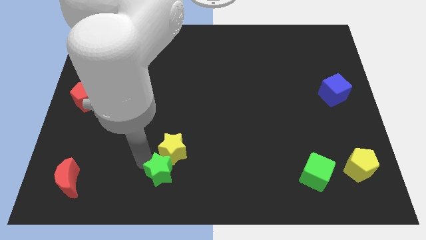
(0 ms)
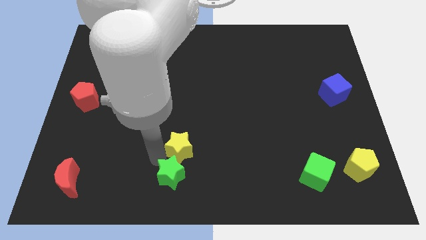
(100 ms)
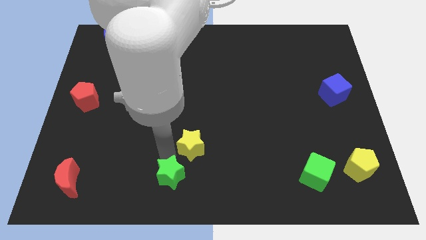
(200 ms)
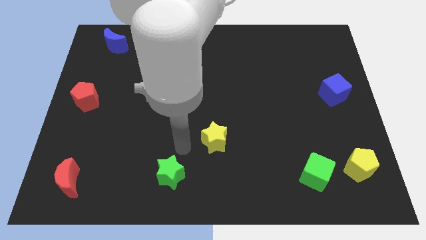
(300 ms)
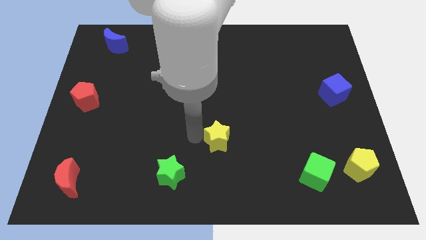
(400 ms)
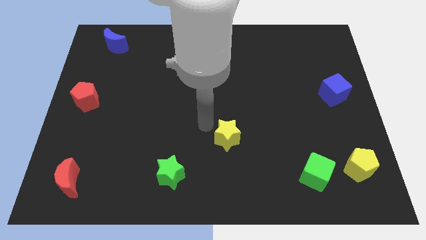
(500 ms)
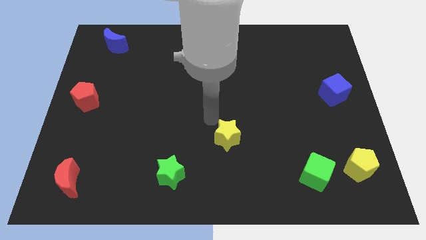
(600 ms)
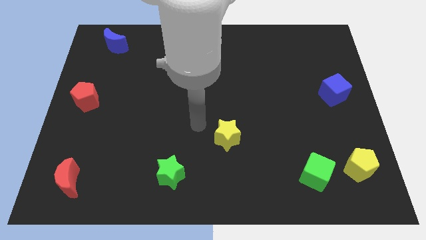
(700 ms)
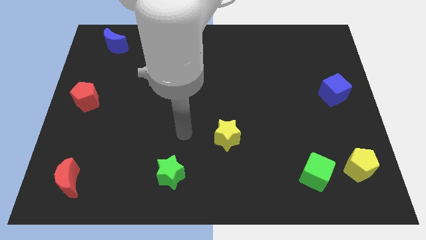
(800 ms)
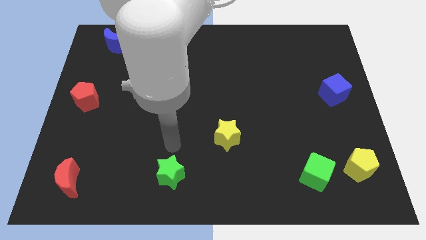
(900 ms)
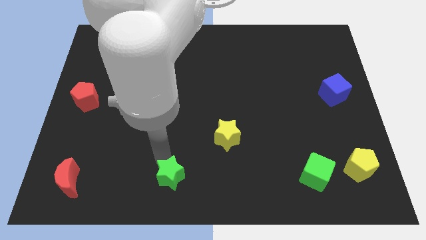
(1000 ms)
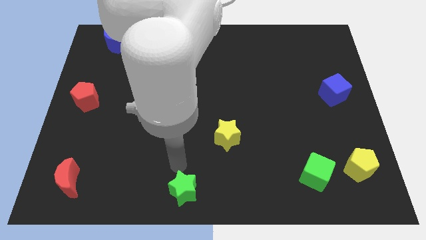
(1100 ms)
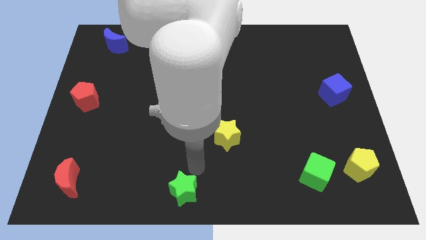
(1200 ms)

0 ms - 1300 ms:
place the green star to the bottom middle of the board

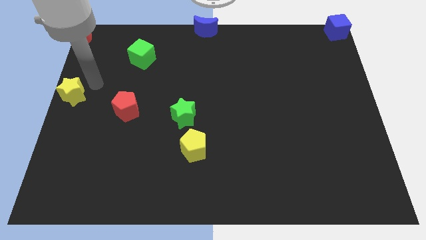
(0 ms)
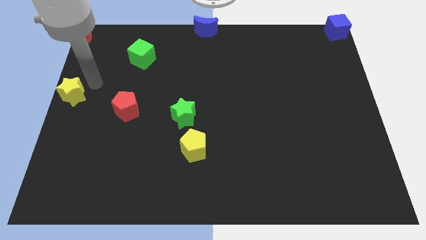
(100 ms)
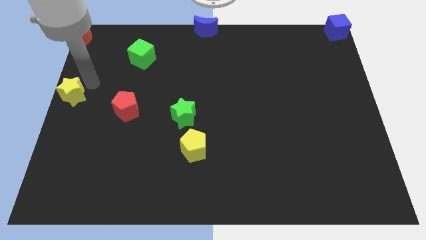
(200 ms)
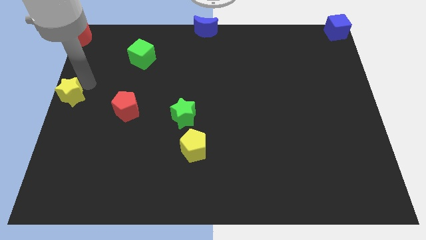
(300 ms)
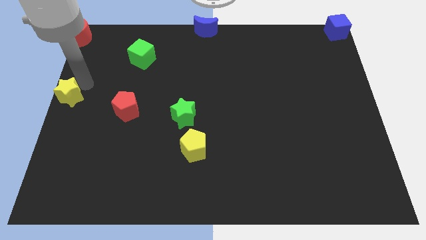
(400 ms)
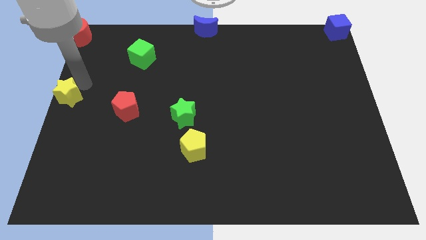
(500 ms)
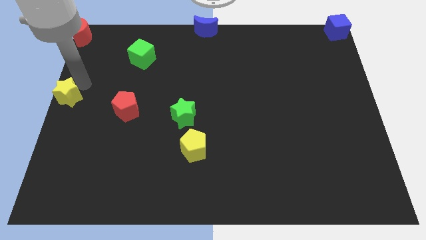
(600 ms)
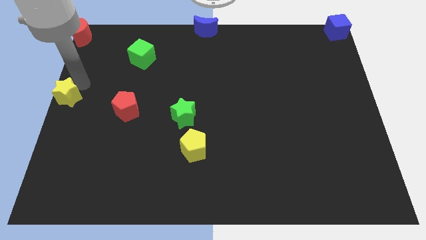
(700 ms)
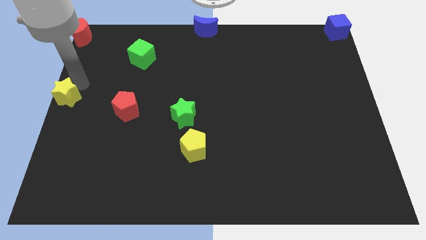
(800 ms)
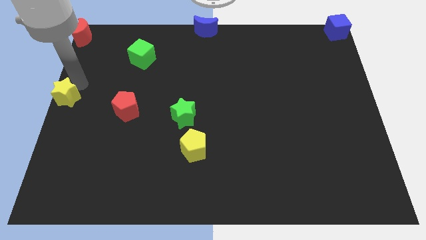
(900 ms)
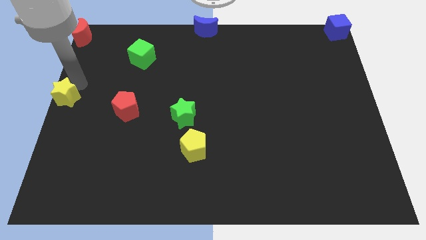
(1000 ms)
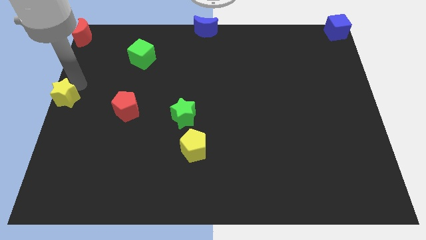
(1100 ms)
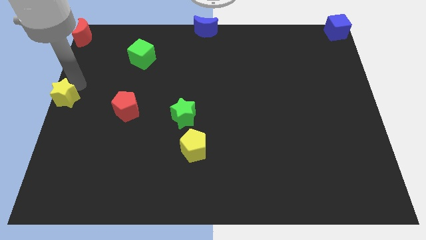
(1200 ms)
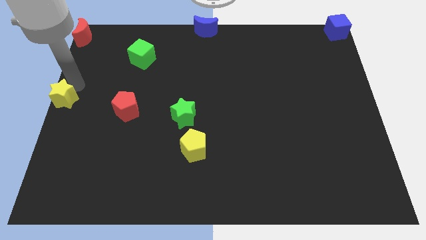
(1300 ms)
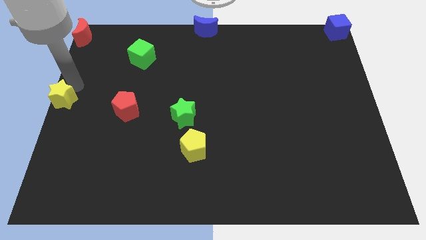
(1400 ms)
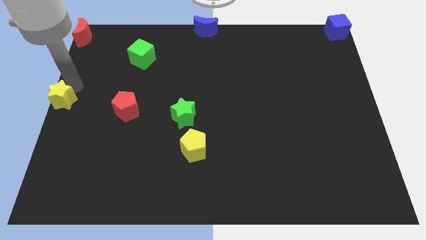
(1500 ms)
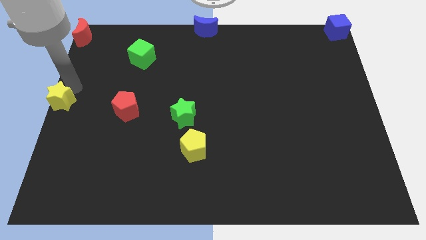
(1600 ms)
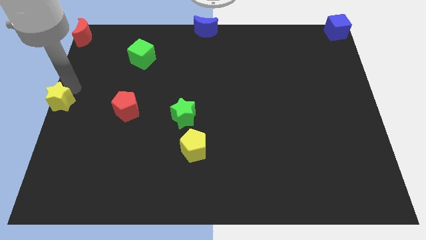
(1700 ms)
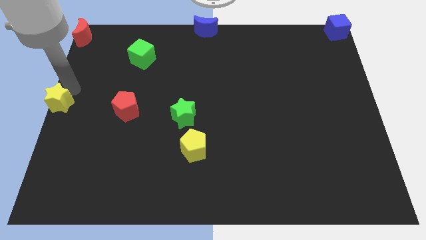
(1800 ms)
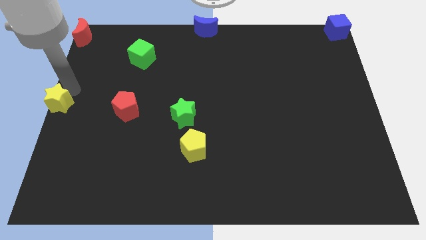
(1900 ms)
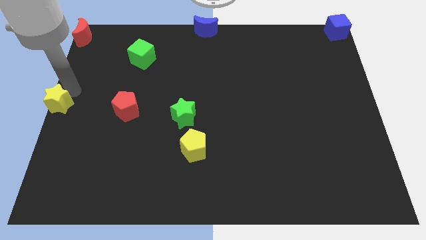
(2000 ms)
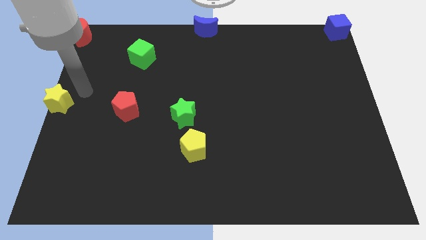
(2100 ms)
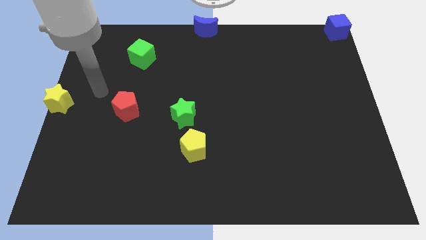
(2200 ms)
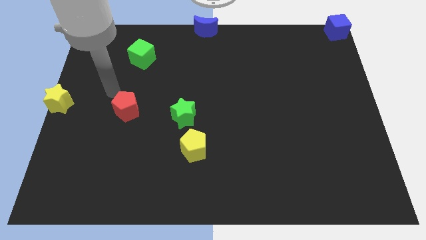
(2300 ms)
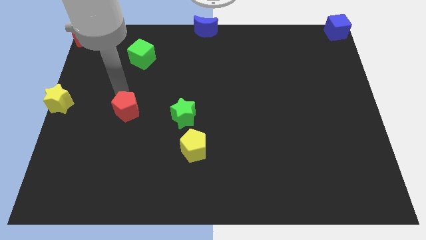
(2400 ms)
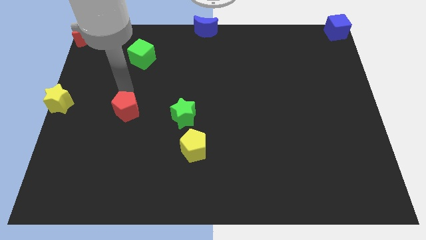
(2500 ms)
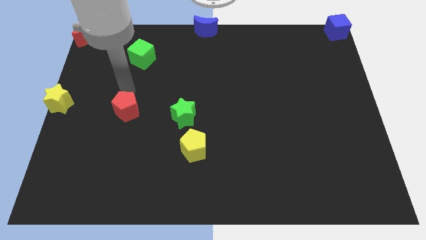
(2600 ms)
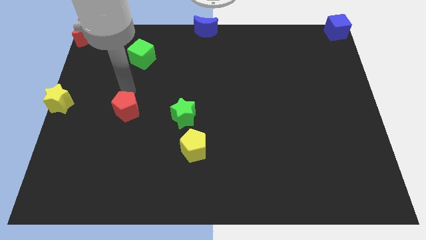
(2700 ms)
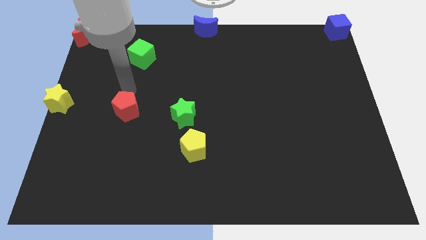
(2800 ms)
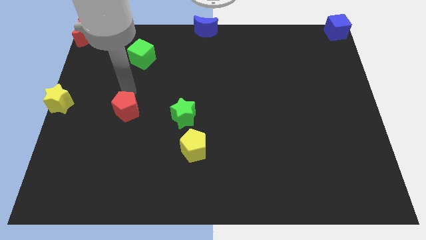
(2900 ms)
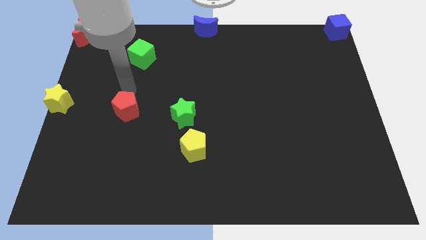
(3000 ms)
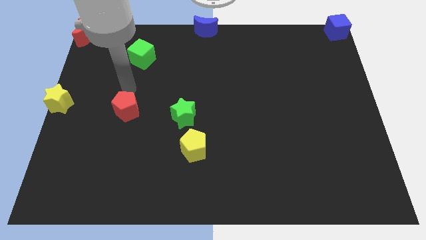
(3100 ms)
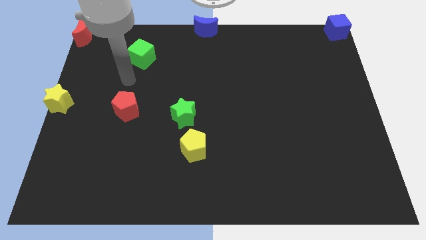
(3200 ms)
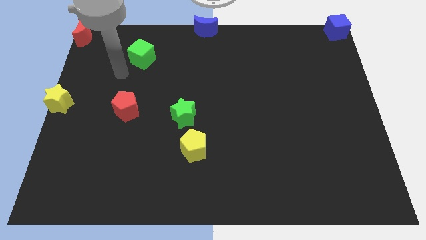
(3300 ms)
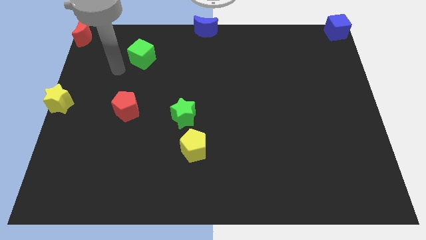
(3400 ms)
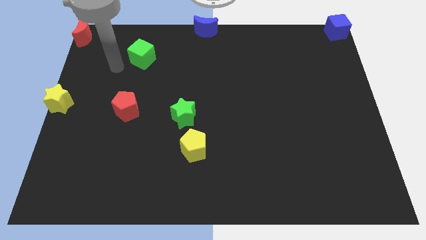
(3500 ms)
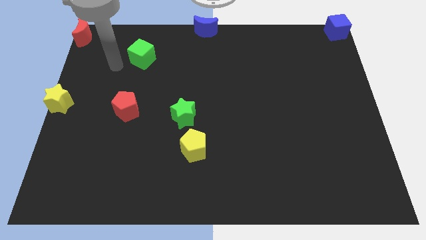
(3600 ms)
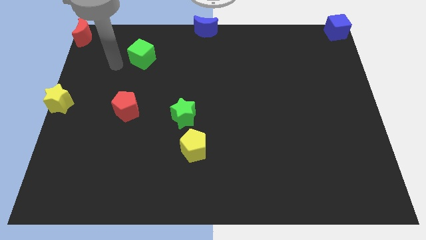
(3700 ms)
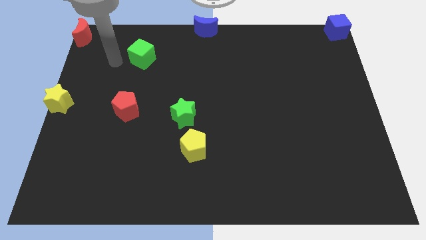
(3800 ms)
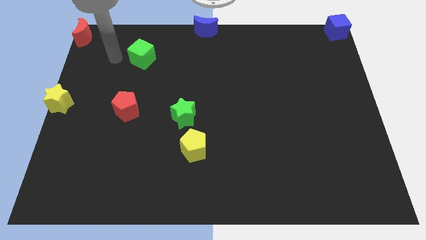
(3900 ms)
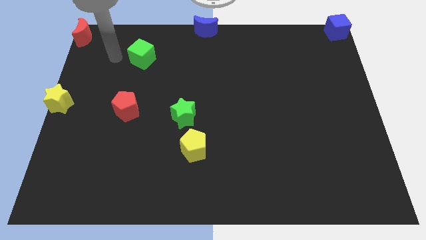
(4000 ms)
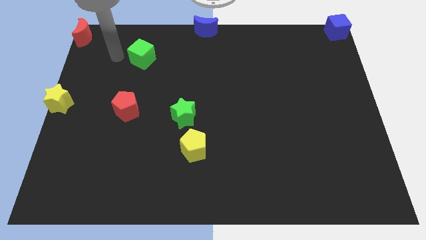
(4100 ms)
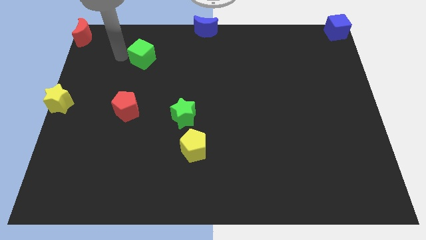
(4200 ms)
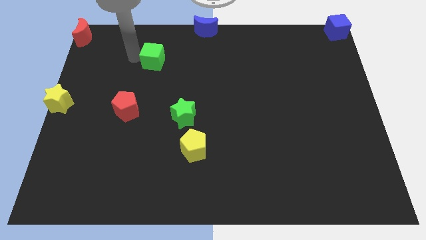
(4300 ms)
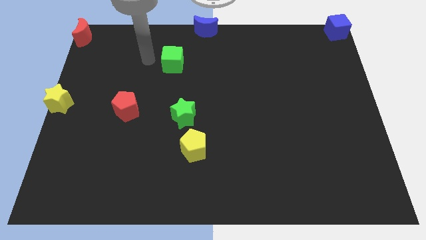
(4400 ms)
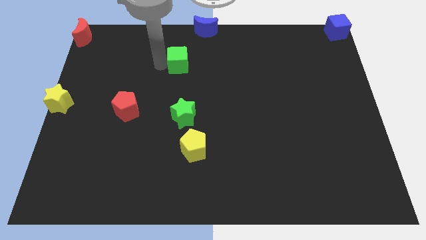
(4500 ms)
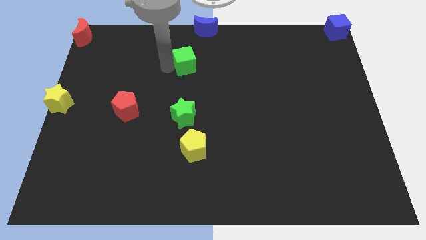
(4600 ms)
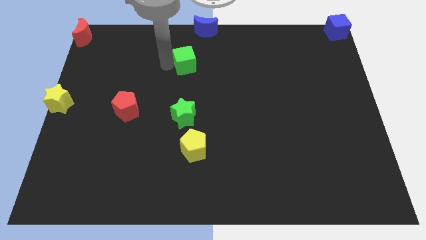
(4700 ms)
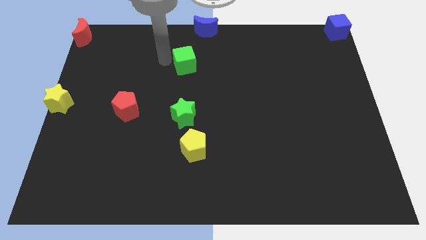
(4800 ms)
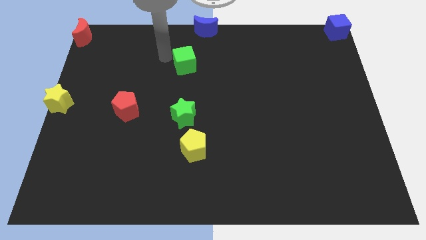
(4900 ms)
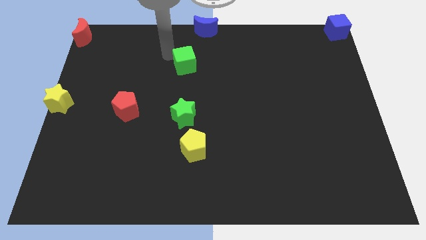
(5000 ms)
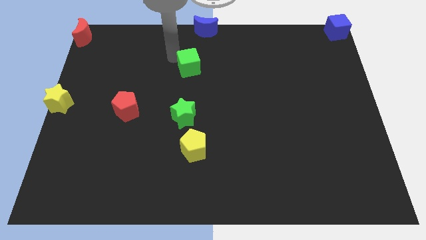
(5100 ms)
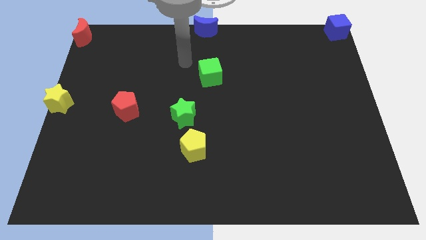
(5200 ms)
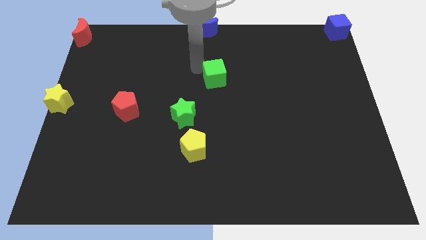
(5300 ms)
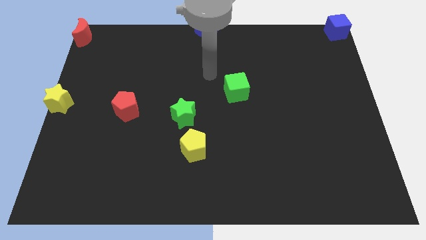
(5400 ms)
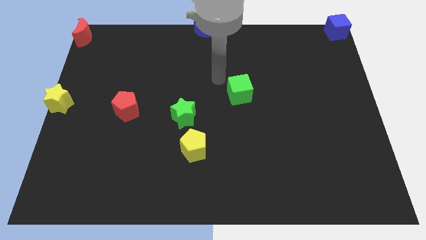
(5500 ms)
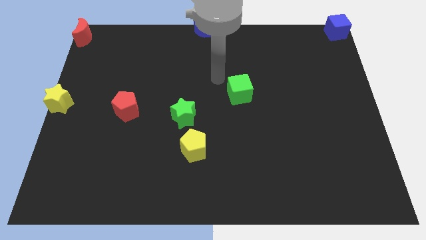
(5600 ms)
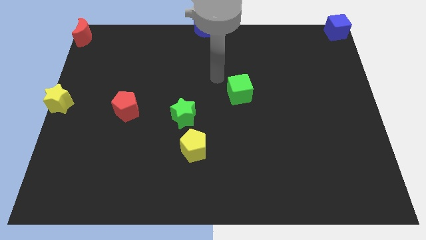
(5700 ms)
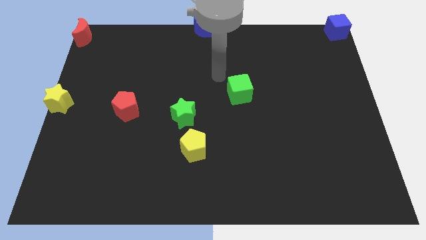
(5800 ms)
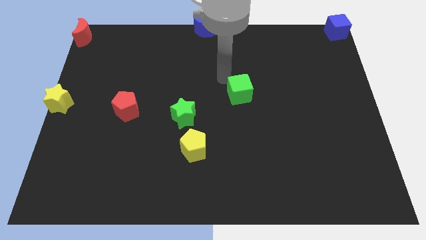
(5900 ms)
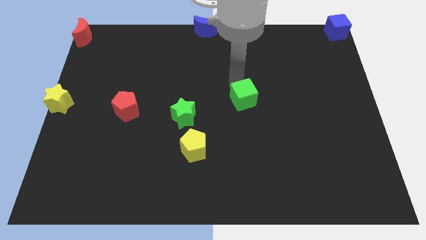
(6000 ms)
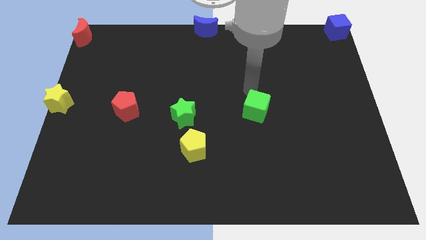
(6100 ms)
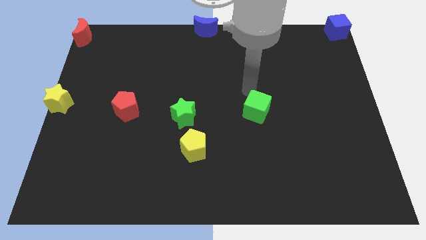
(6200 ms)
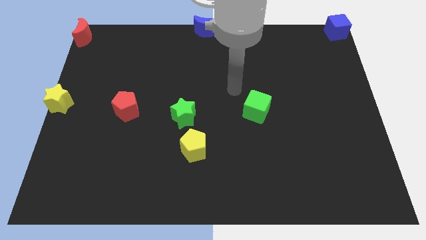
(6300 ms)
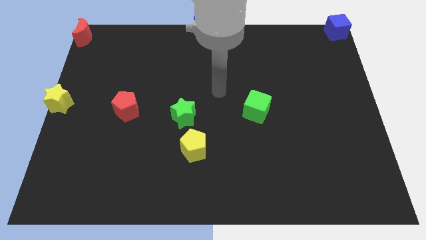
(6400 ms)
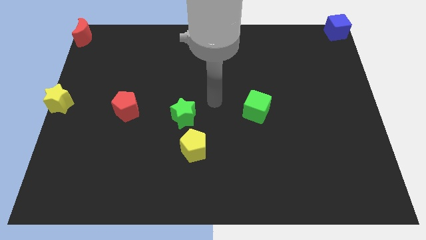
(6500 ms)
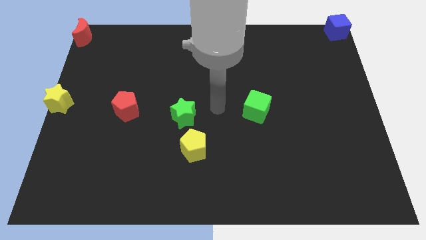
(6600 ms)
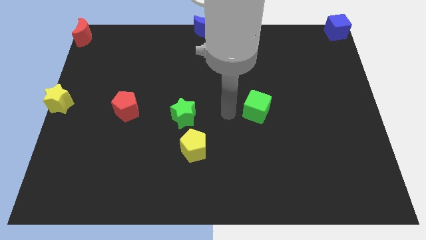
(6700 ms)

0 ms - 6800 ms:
slide the green cube to the right side of the green star

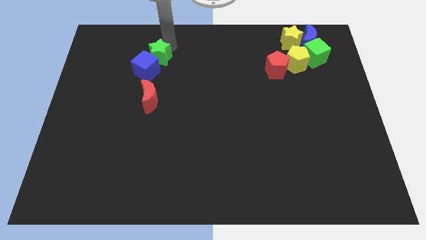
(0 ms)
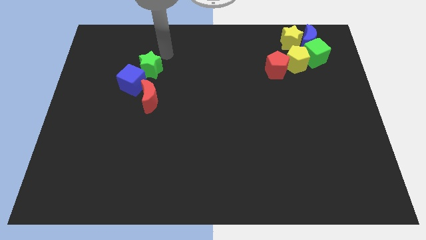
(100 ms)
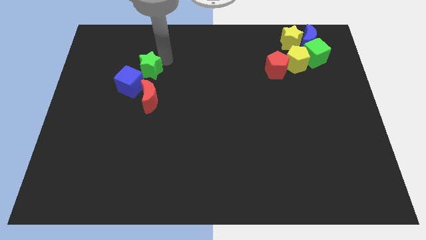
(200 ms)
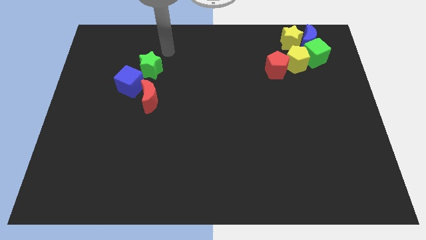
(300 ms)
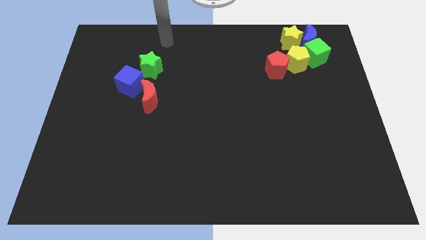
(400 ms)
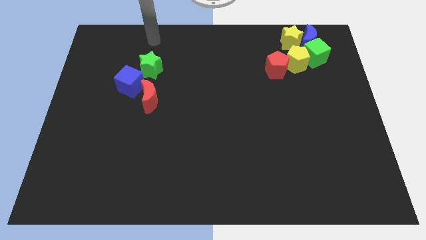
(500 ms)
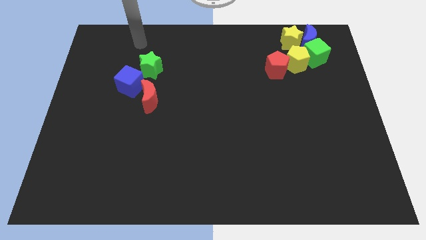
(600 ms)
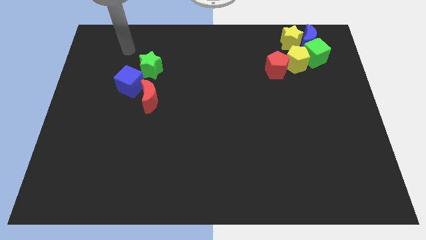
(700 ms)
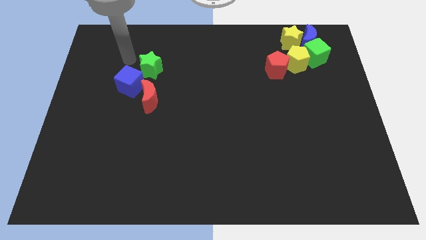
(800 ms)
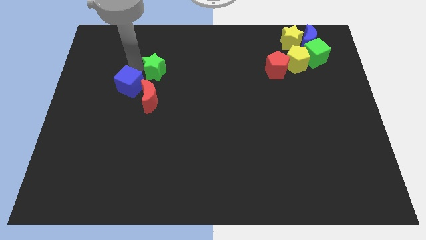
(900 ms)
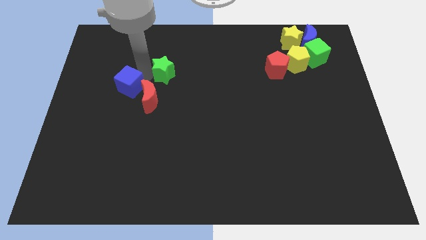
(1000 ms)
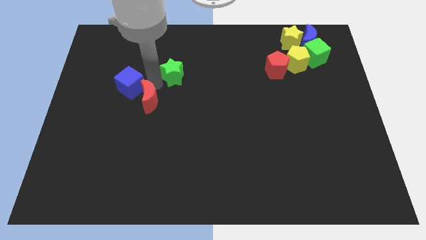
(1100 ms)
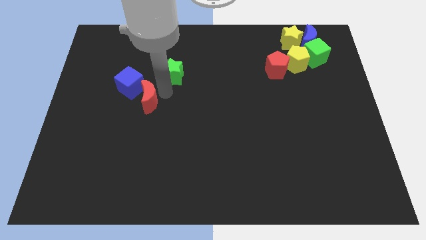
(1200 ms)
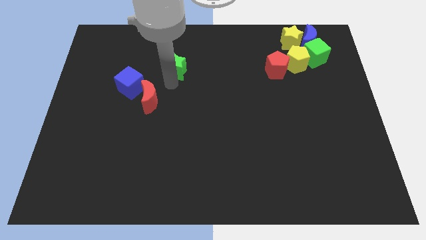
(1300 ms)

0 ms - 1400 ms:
place your hand in between the green star and red moon
